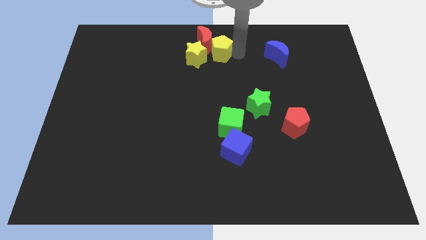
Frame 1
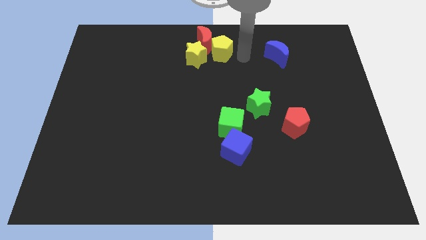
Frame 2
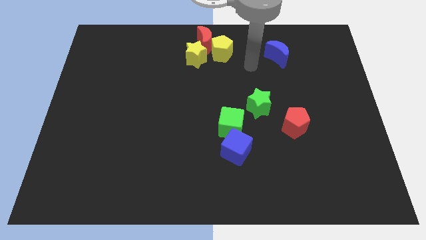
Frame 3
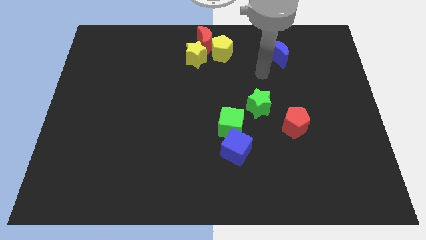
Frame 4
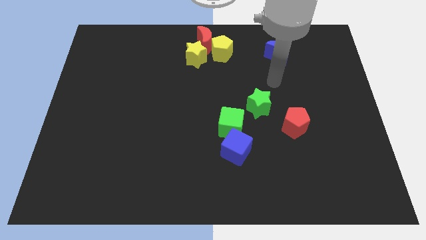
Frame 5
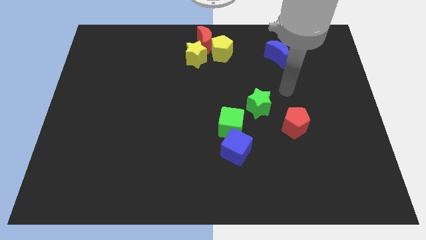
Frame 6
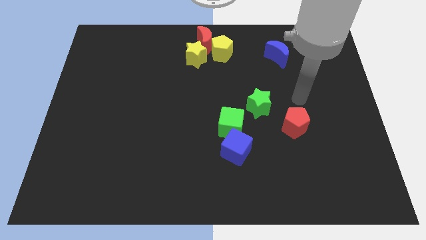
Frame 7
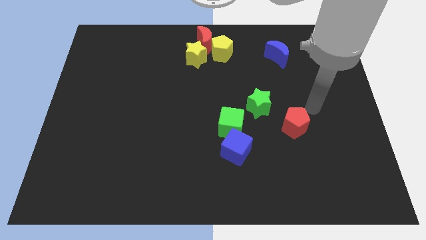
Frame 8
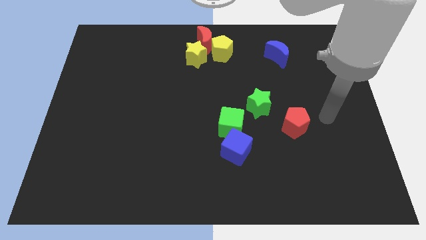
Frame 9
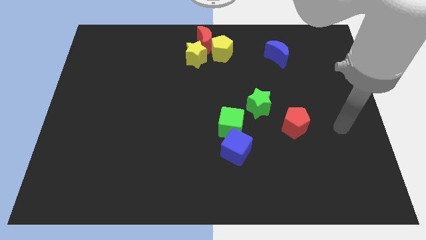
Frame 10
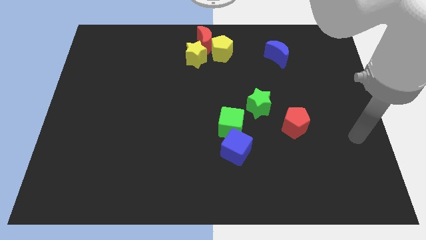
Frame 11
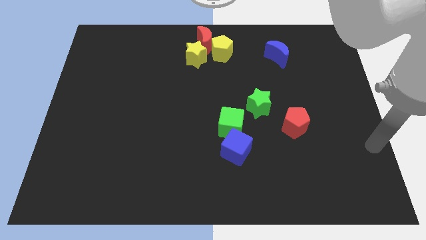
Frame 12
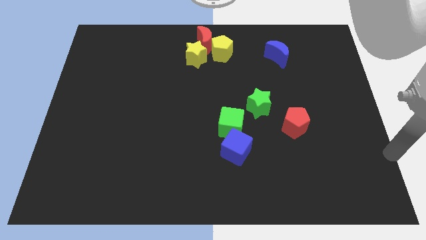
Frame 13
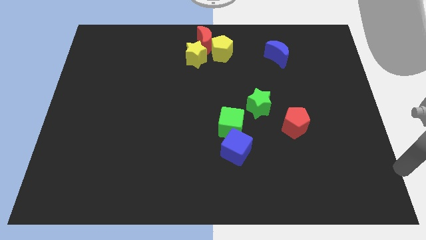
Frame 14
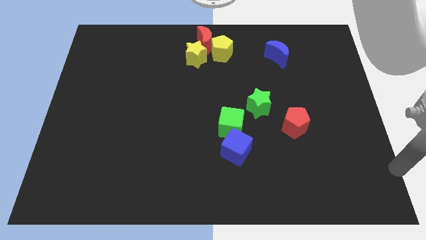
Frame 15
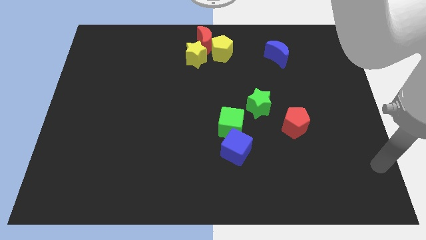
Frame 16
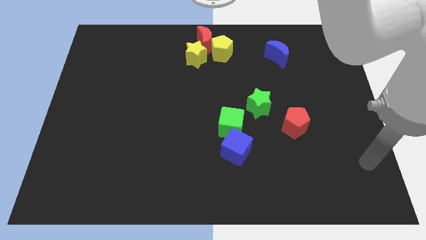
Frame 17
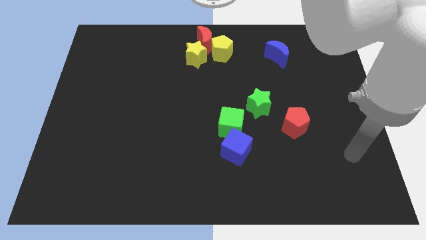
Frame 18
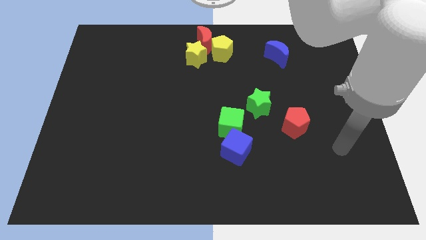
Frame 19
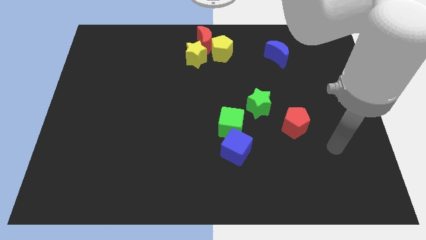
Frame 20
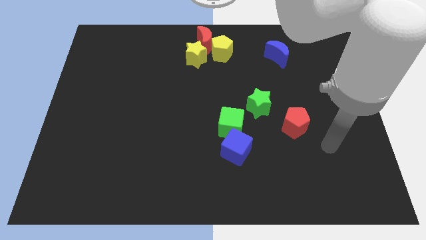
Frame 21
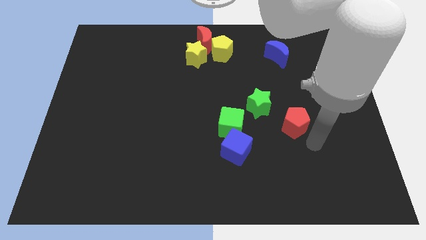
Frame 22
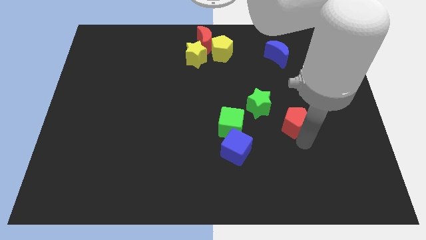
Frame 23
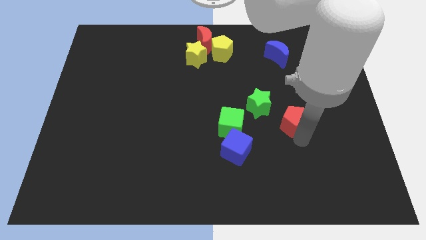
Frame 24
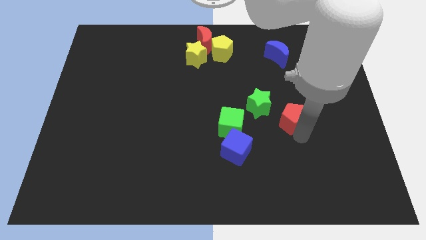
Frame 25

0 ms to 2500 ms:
go away from the group of blocks

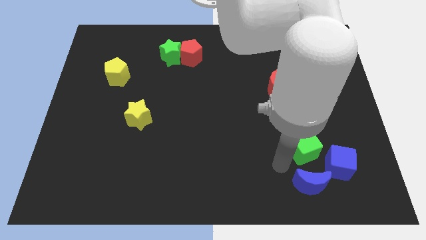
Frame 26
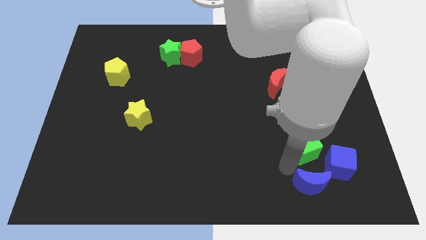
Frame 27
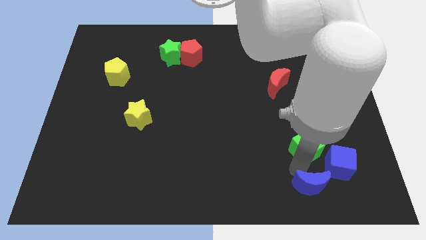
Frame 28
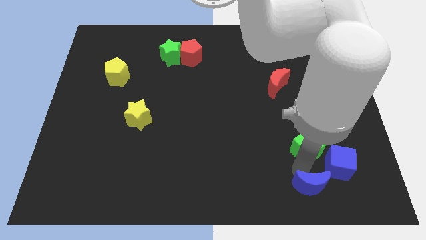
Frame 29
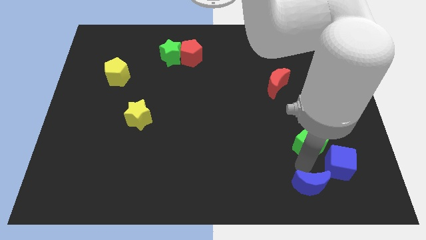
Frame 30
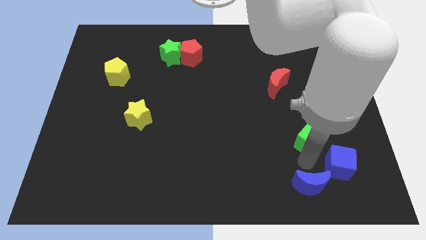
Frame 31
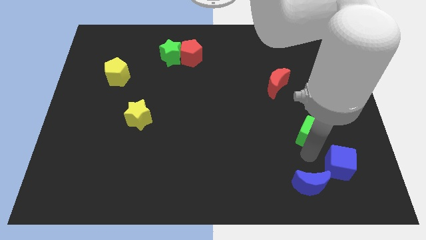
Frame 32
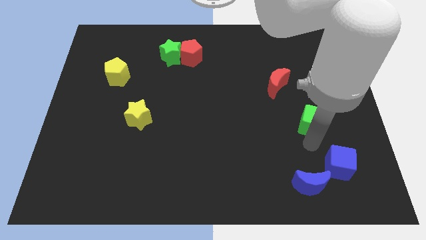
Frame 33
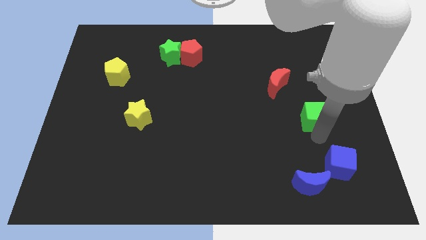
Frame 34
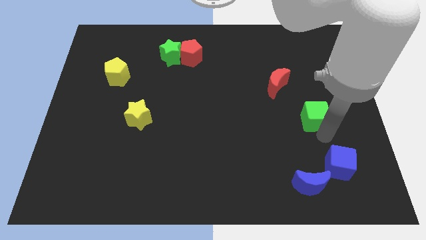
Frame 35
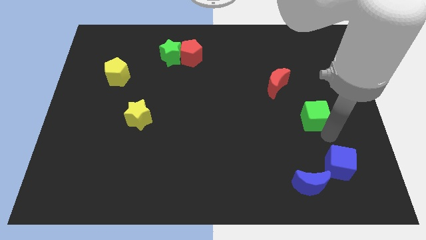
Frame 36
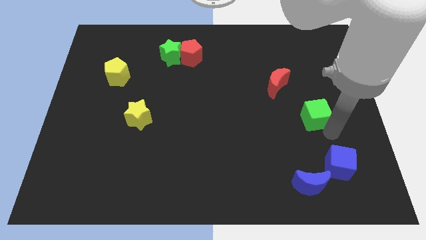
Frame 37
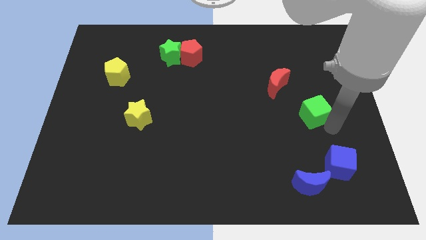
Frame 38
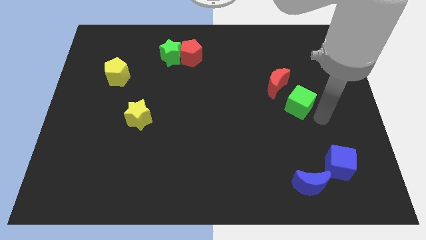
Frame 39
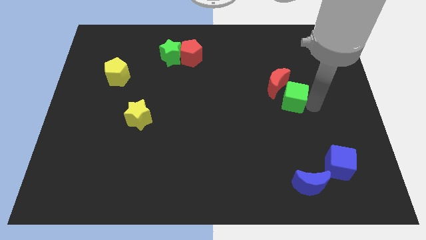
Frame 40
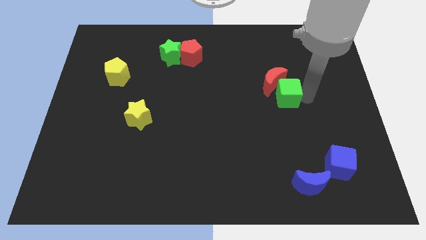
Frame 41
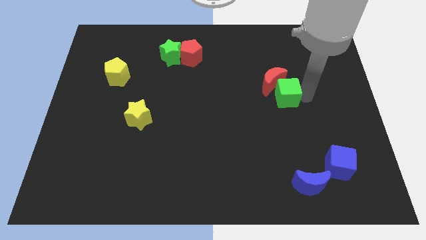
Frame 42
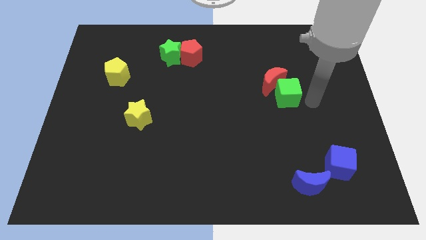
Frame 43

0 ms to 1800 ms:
push the green cube parallel to the red crescent

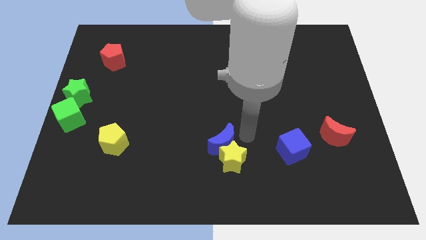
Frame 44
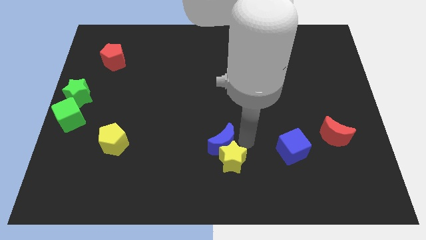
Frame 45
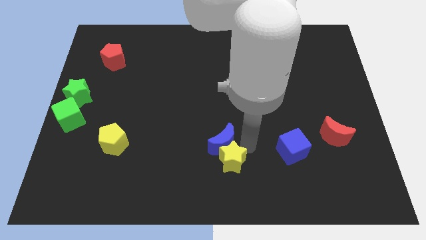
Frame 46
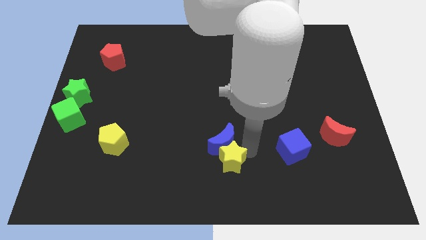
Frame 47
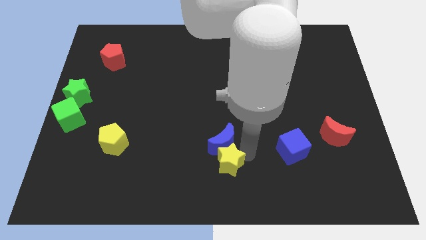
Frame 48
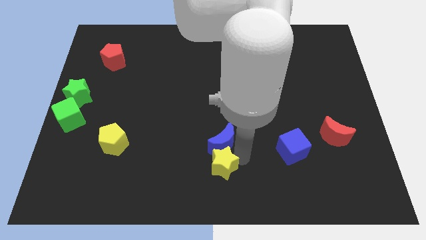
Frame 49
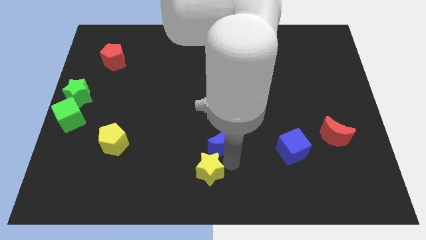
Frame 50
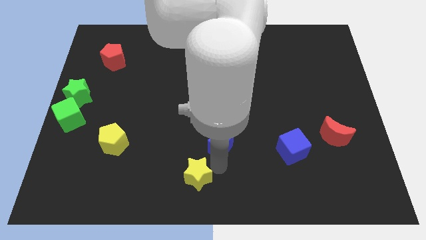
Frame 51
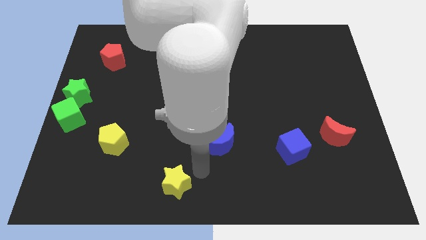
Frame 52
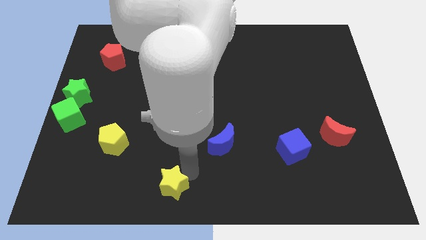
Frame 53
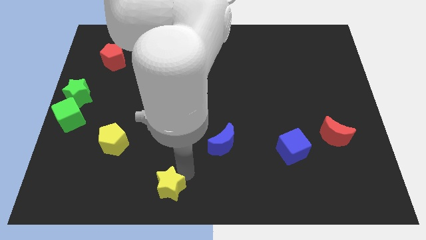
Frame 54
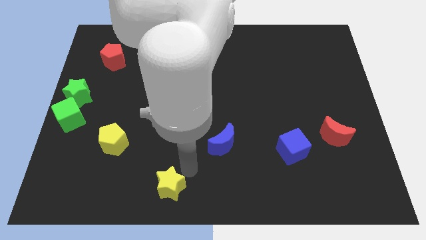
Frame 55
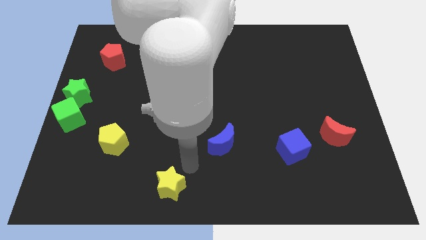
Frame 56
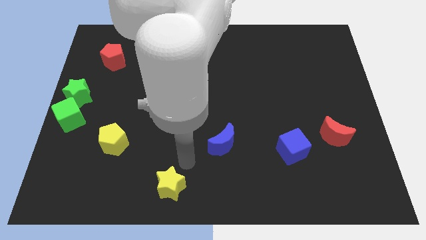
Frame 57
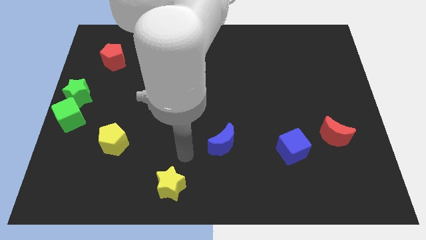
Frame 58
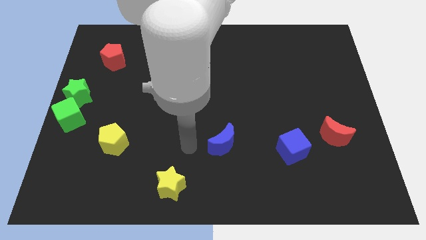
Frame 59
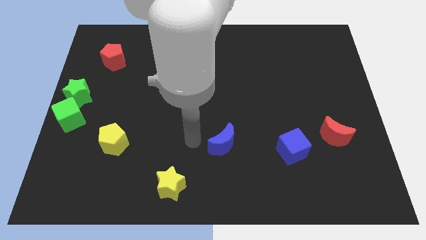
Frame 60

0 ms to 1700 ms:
separate the yellow star from the blue moon

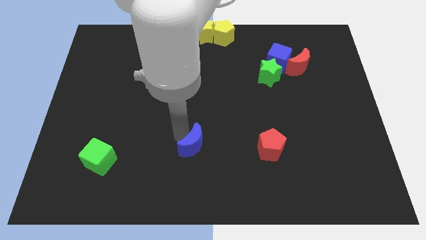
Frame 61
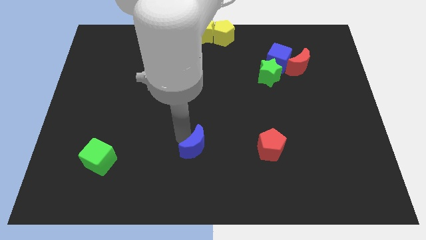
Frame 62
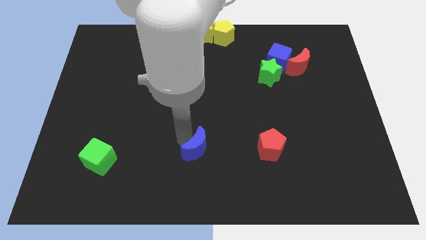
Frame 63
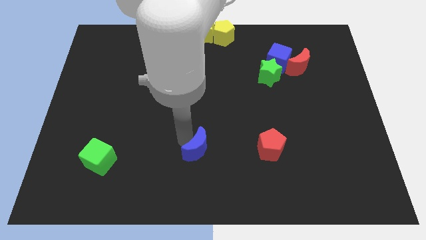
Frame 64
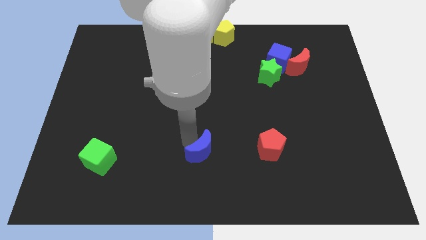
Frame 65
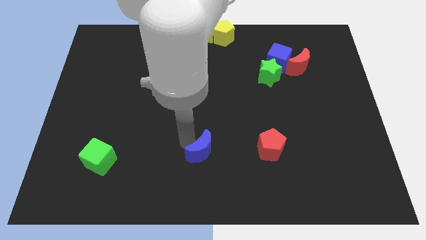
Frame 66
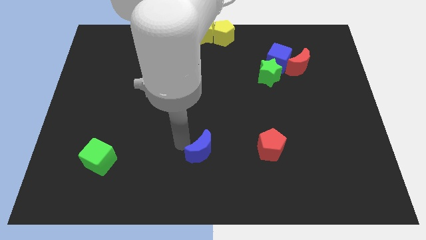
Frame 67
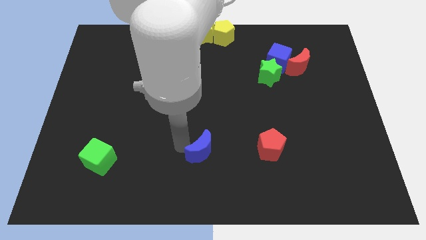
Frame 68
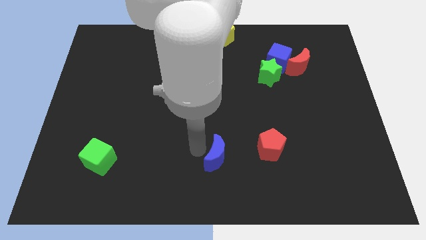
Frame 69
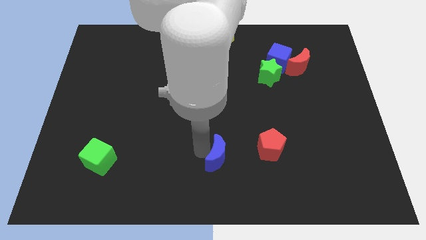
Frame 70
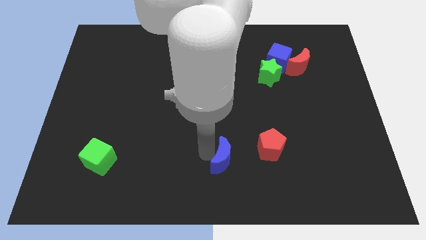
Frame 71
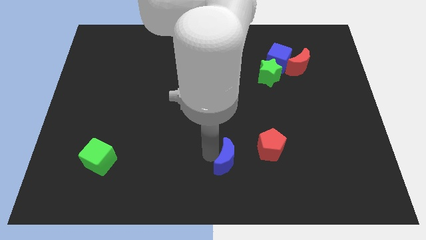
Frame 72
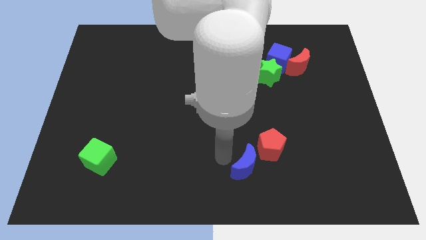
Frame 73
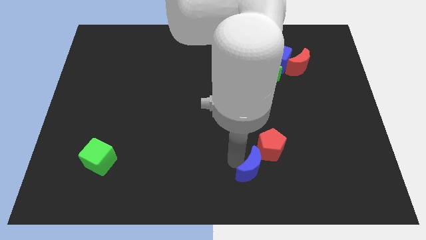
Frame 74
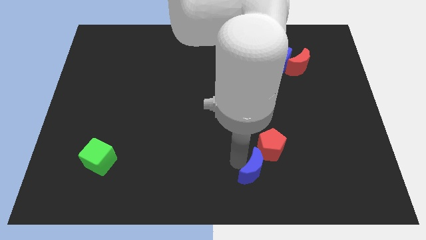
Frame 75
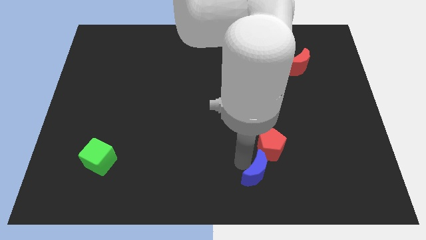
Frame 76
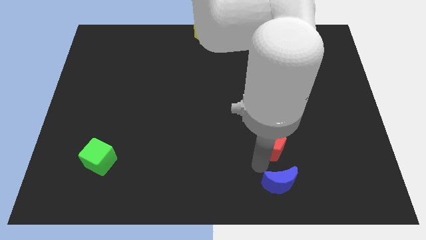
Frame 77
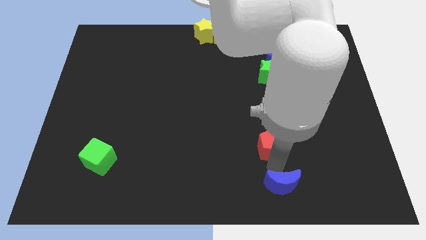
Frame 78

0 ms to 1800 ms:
place the blue moon vertically below the red pentagon

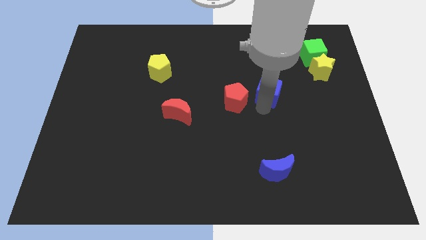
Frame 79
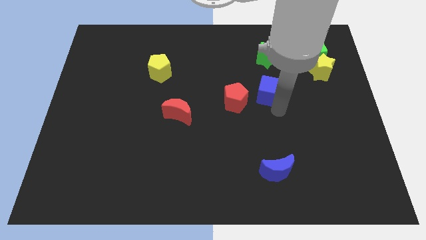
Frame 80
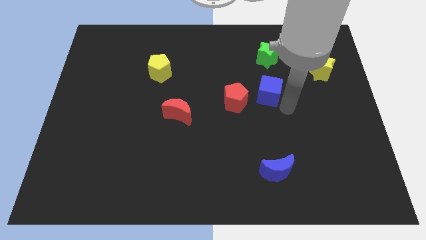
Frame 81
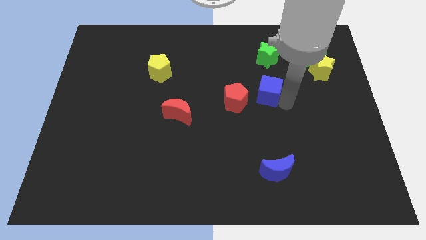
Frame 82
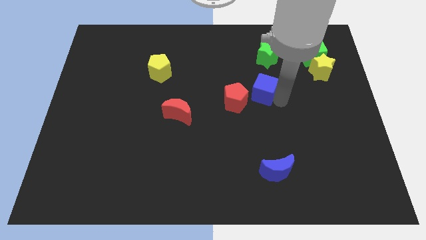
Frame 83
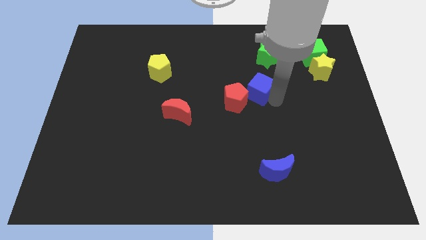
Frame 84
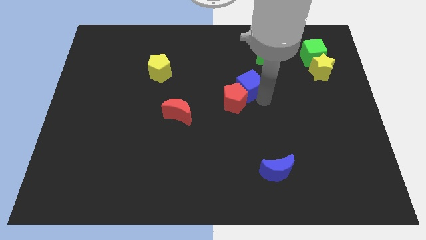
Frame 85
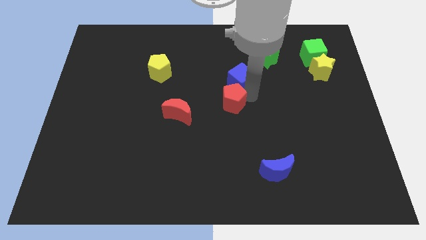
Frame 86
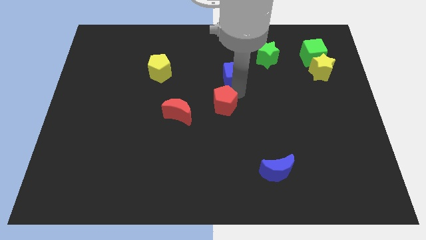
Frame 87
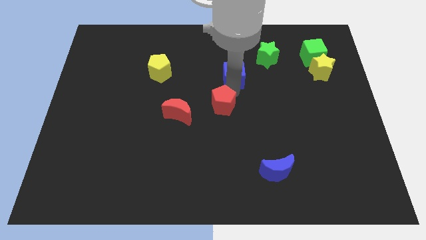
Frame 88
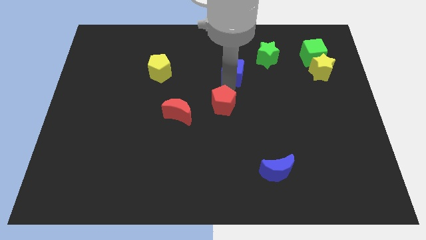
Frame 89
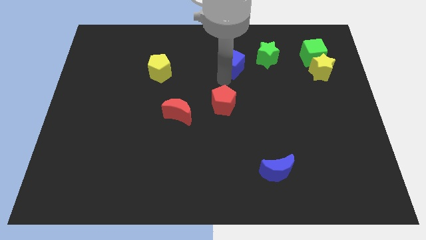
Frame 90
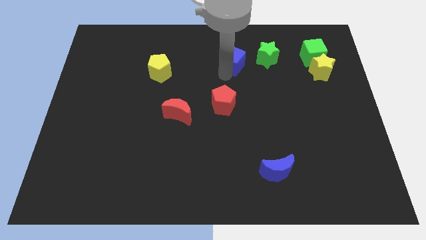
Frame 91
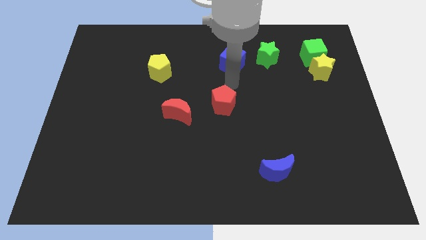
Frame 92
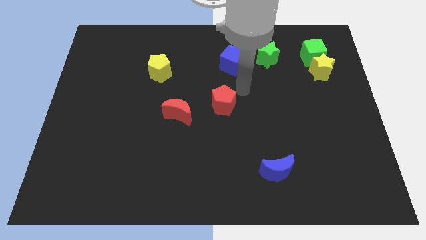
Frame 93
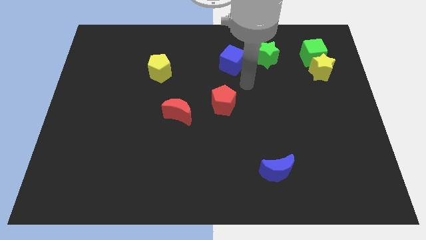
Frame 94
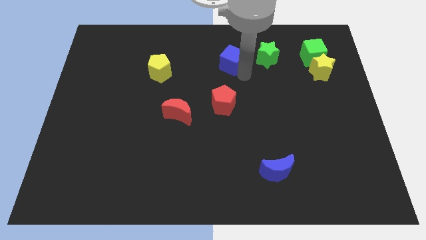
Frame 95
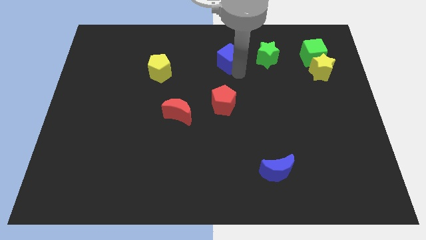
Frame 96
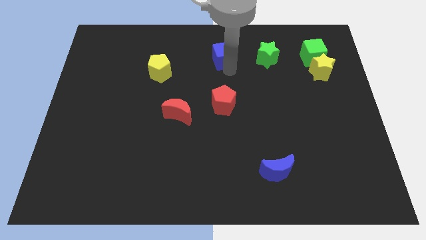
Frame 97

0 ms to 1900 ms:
move the blue cube to the left of the green star
